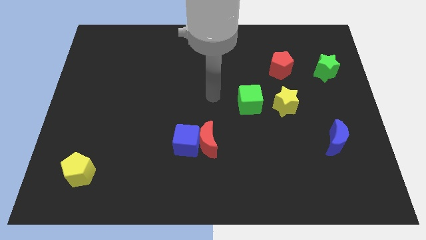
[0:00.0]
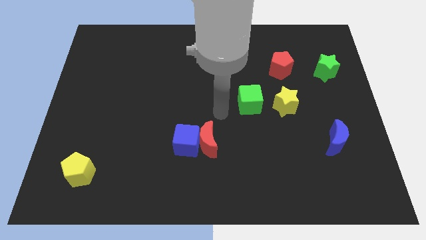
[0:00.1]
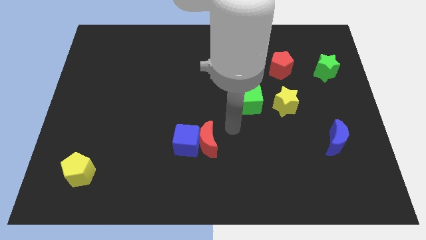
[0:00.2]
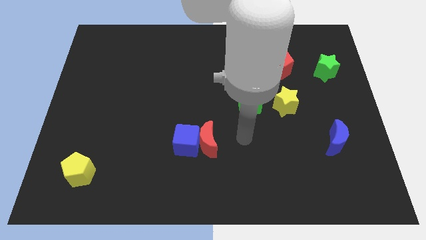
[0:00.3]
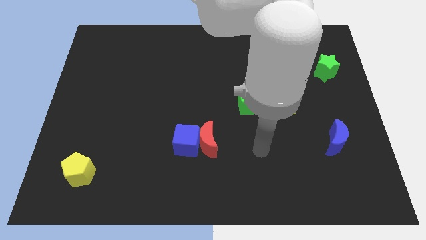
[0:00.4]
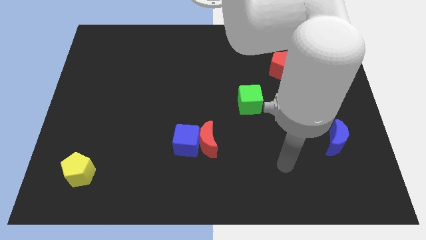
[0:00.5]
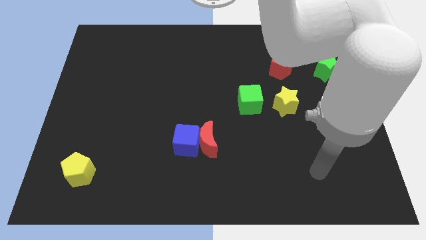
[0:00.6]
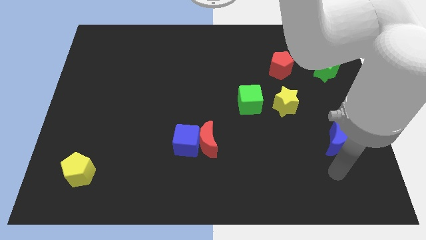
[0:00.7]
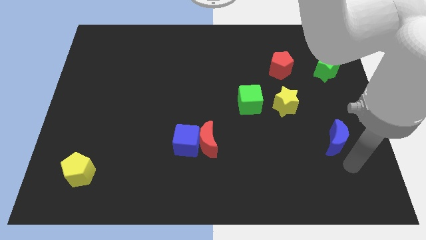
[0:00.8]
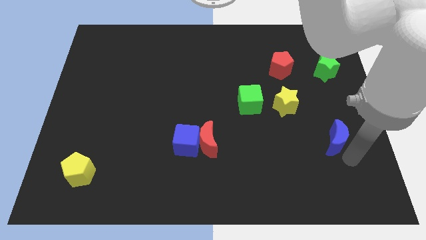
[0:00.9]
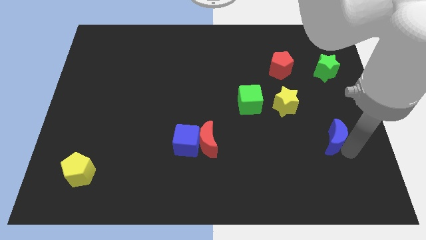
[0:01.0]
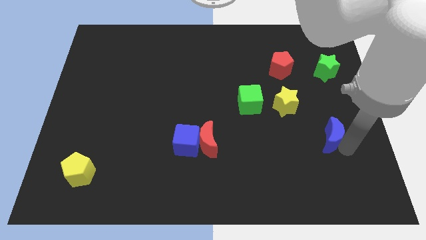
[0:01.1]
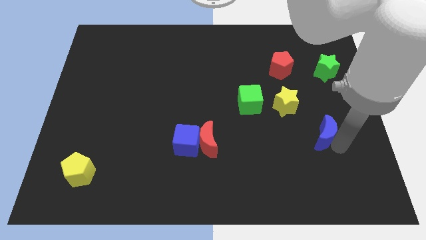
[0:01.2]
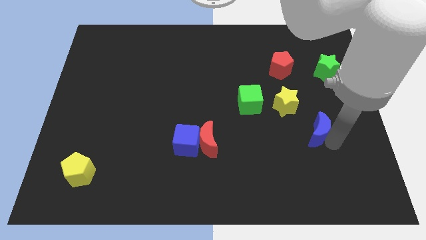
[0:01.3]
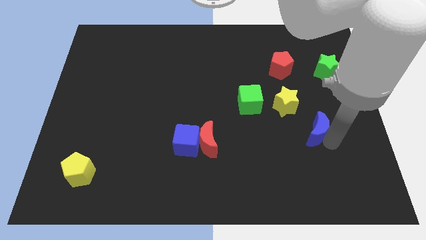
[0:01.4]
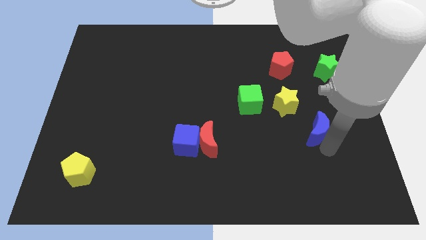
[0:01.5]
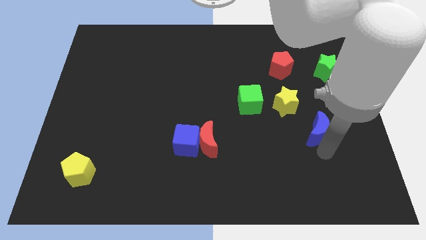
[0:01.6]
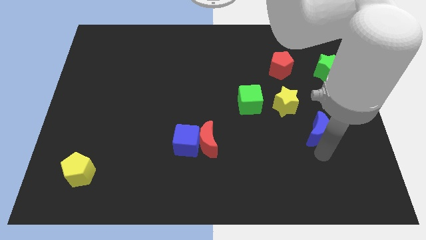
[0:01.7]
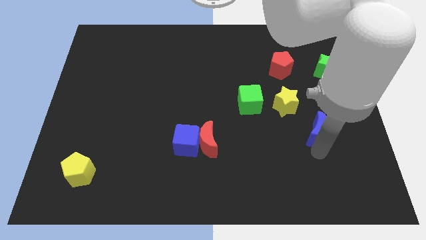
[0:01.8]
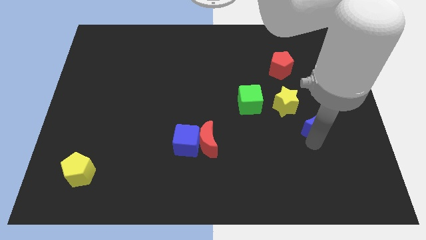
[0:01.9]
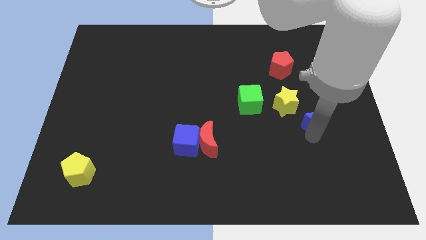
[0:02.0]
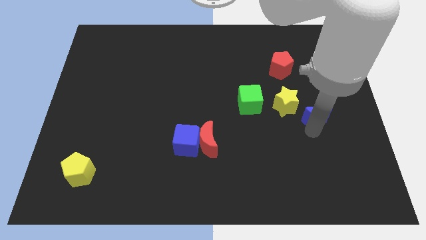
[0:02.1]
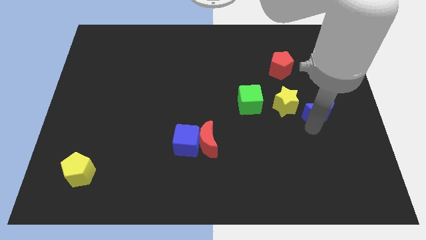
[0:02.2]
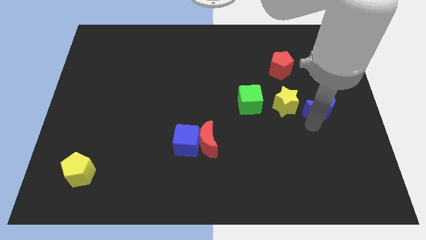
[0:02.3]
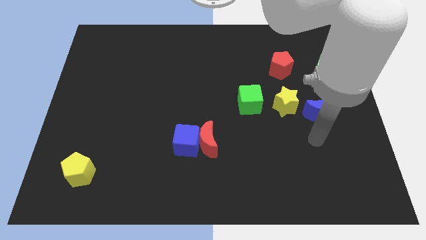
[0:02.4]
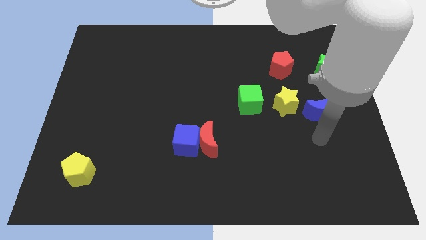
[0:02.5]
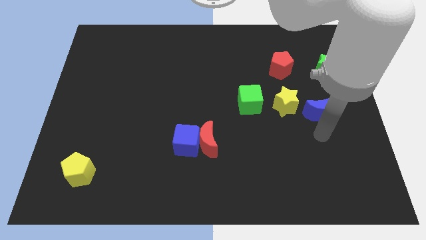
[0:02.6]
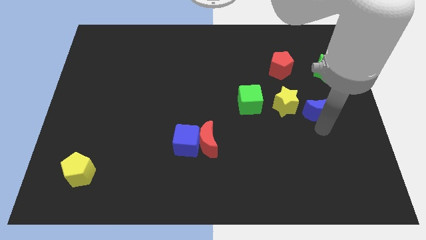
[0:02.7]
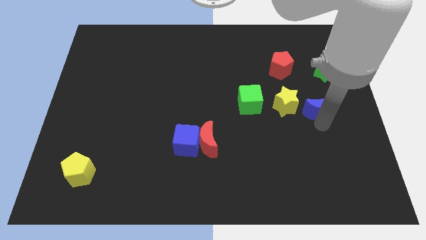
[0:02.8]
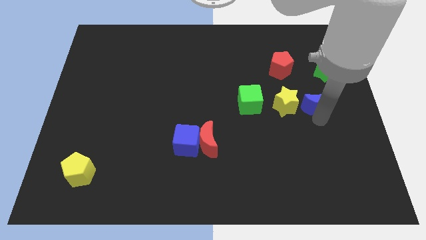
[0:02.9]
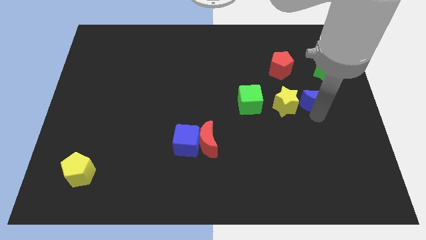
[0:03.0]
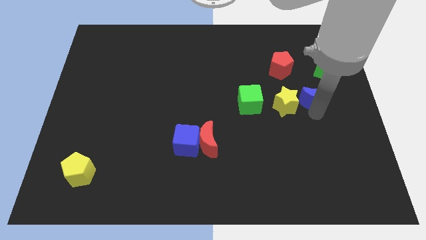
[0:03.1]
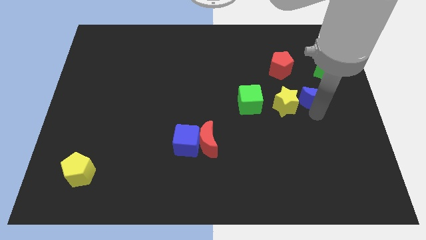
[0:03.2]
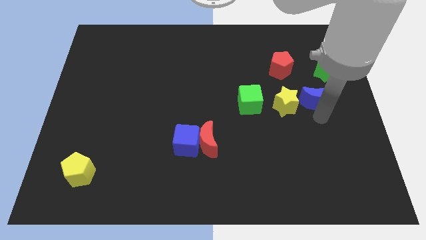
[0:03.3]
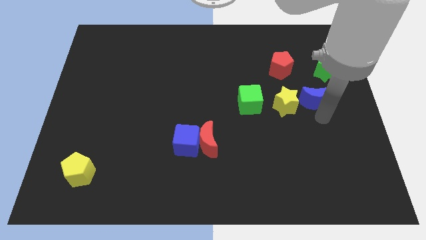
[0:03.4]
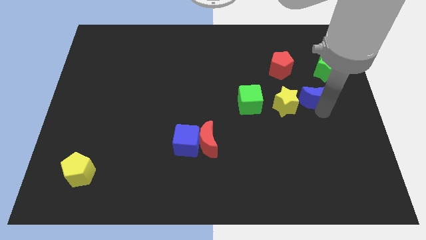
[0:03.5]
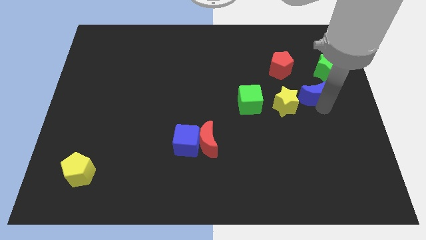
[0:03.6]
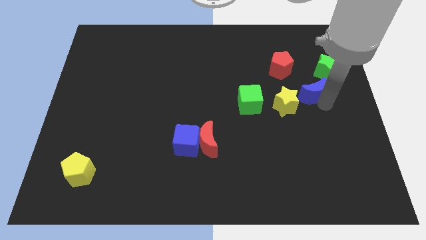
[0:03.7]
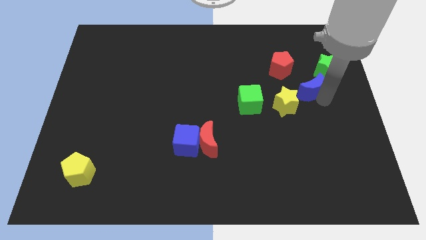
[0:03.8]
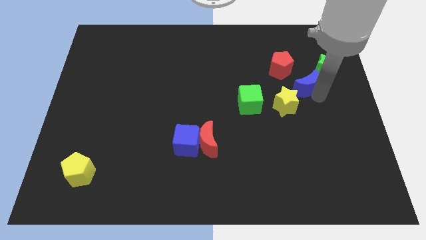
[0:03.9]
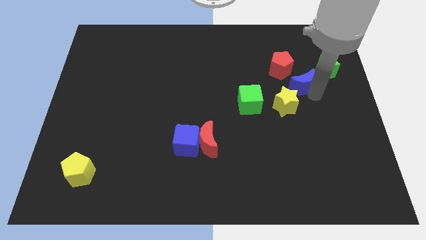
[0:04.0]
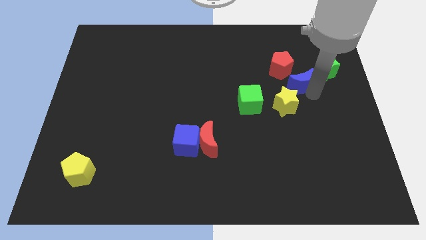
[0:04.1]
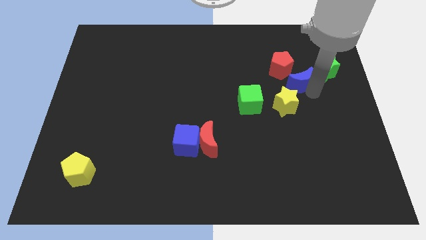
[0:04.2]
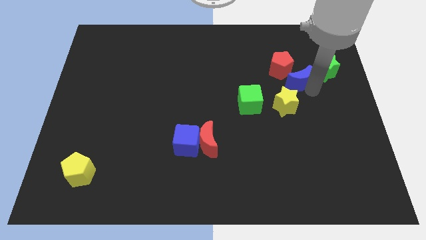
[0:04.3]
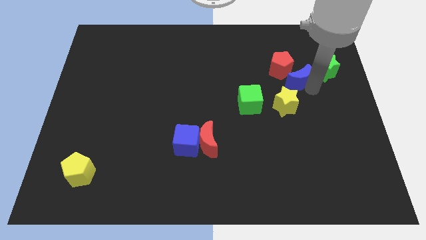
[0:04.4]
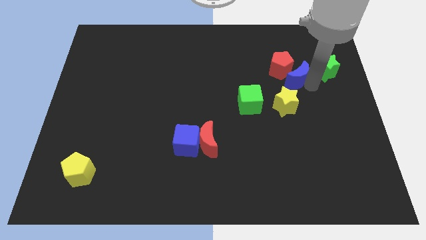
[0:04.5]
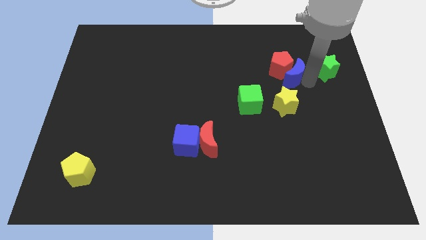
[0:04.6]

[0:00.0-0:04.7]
put the blue moon towards the red pentagon

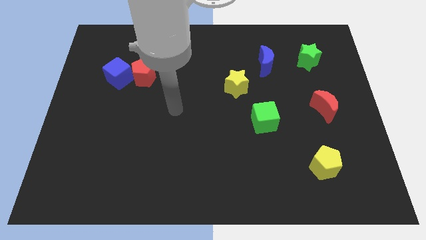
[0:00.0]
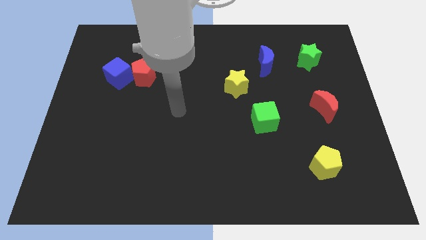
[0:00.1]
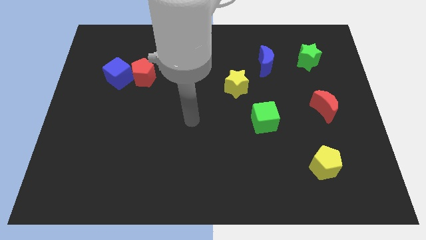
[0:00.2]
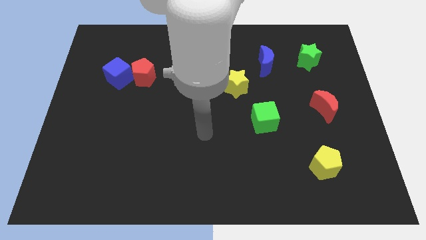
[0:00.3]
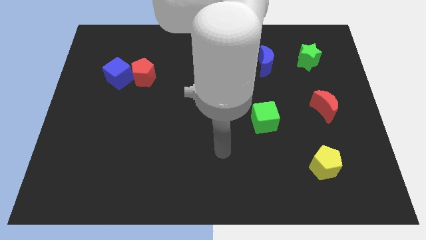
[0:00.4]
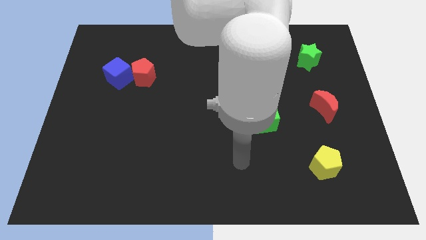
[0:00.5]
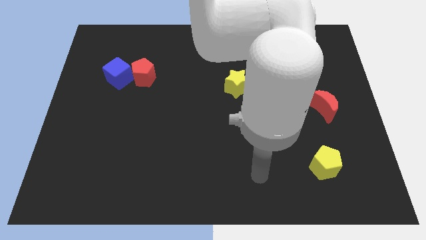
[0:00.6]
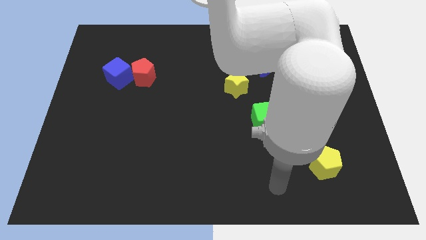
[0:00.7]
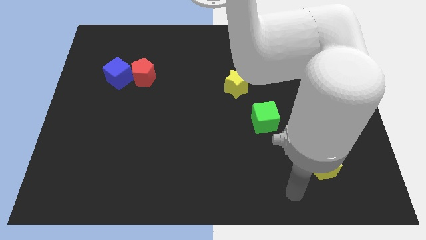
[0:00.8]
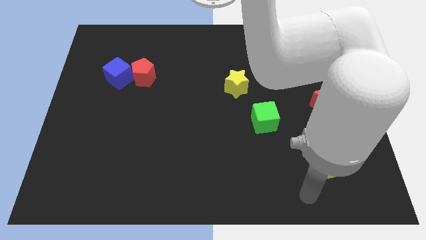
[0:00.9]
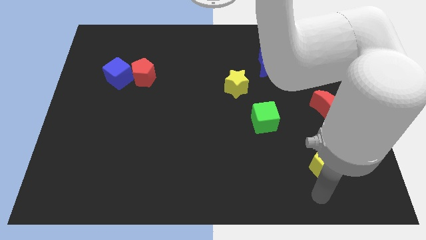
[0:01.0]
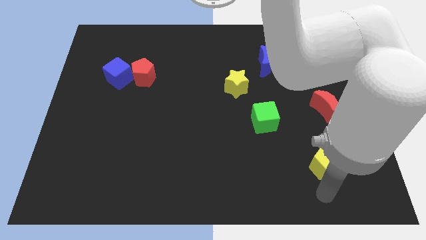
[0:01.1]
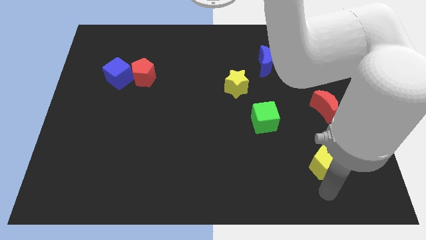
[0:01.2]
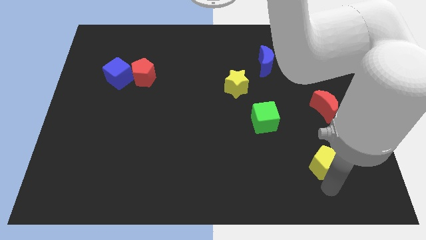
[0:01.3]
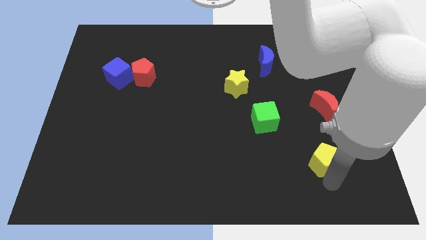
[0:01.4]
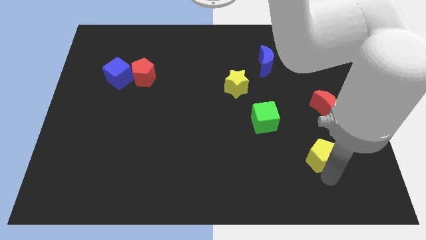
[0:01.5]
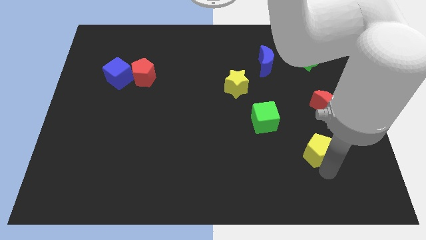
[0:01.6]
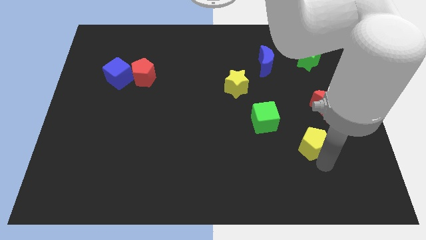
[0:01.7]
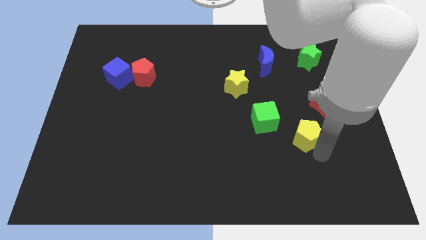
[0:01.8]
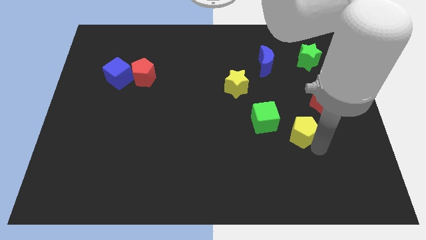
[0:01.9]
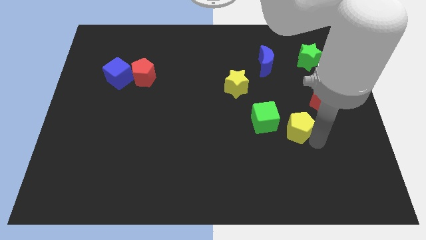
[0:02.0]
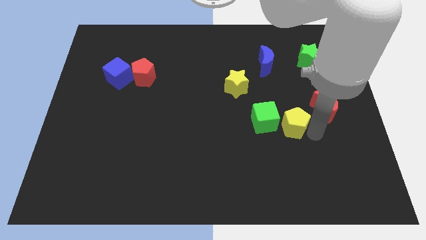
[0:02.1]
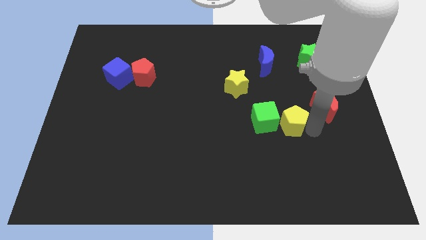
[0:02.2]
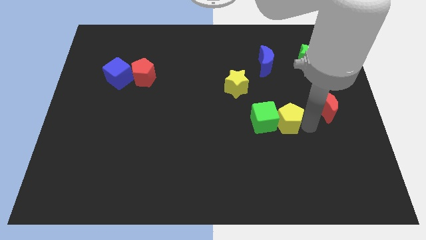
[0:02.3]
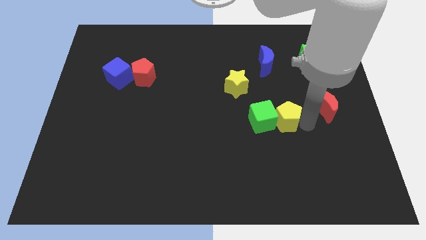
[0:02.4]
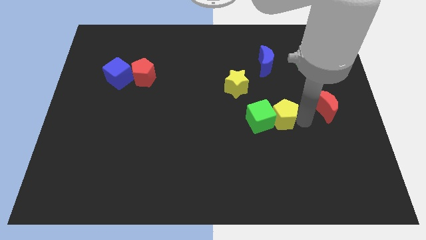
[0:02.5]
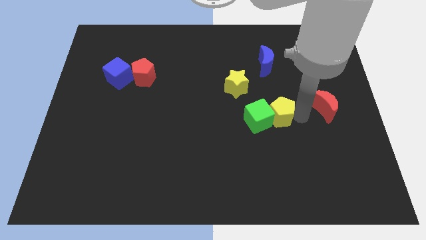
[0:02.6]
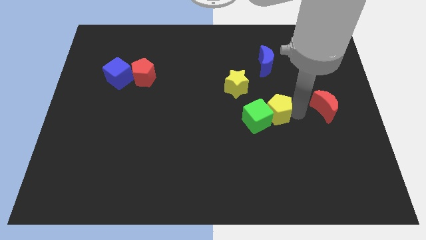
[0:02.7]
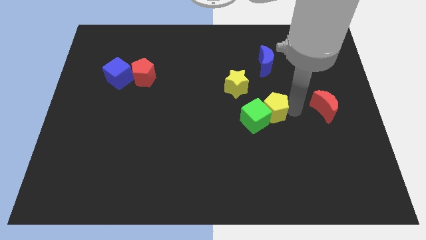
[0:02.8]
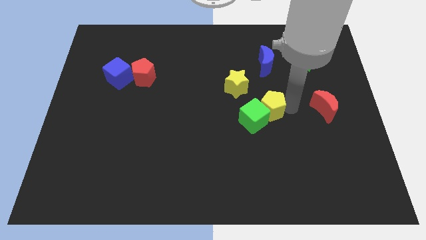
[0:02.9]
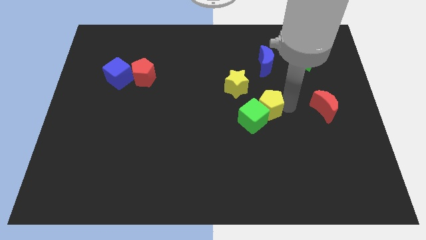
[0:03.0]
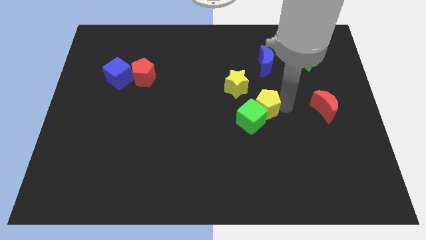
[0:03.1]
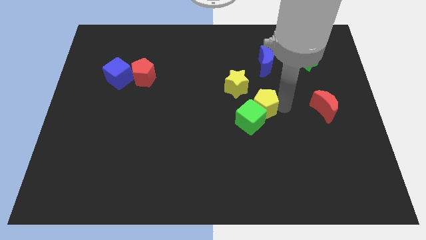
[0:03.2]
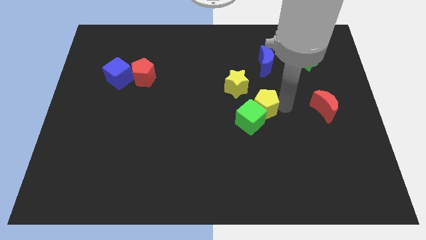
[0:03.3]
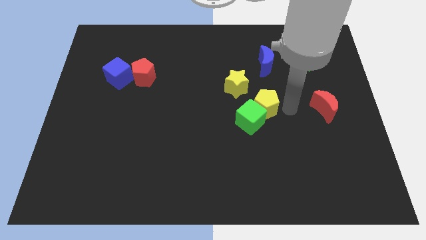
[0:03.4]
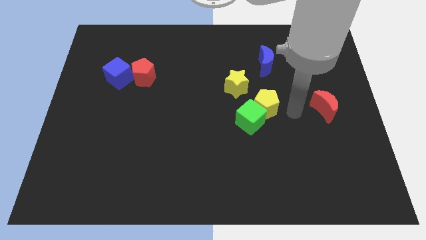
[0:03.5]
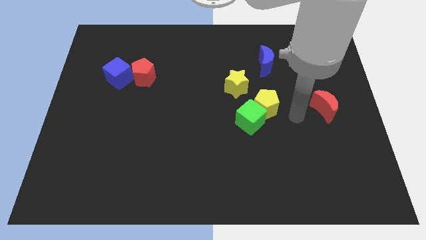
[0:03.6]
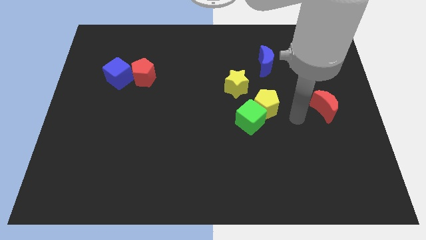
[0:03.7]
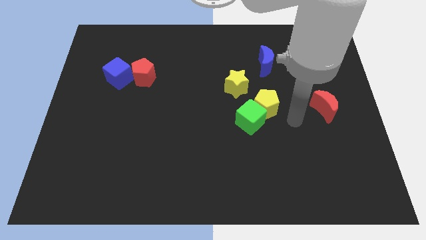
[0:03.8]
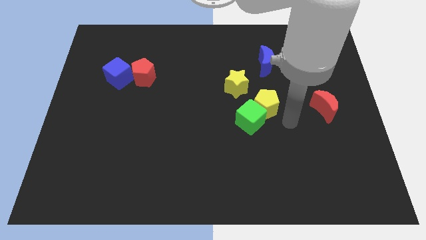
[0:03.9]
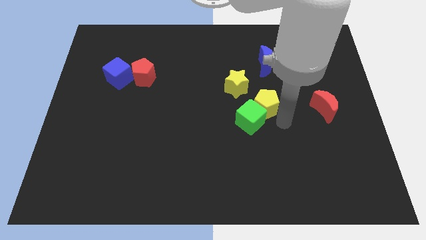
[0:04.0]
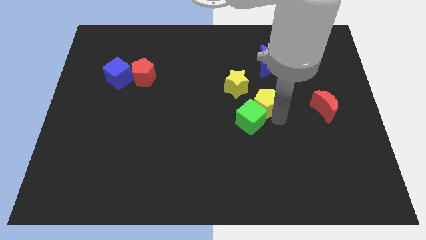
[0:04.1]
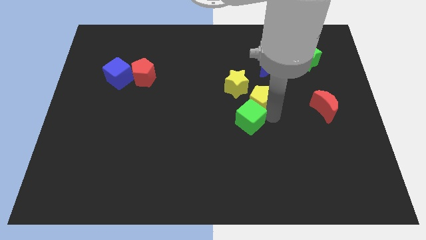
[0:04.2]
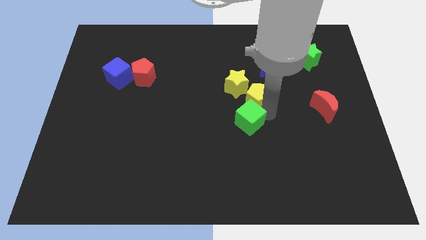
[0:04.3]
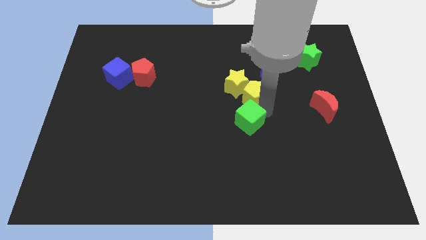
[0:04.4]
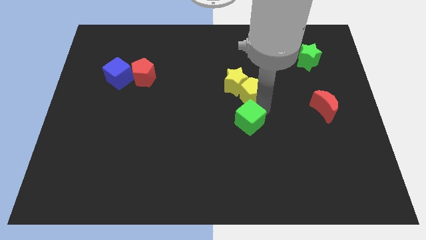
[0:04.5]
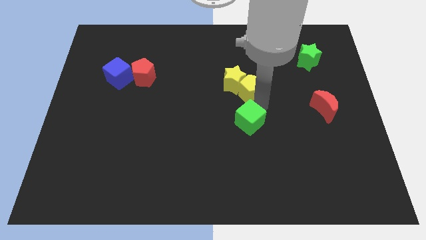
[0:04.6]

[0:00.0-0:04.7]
push the yellow pentagon close to the yellow star
